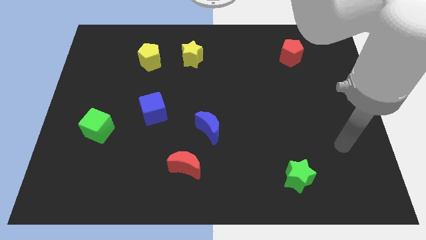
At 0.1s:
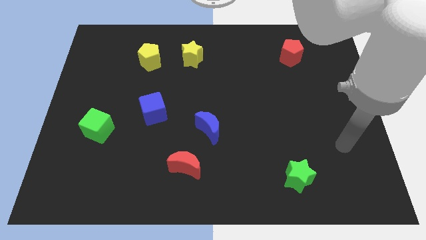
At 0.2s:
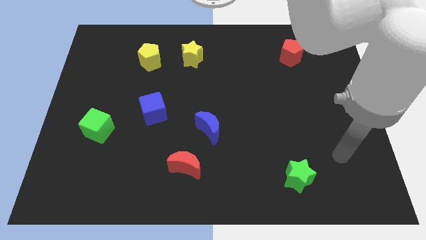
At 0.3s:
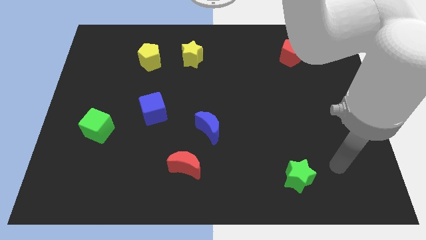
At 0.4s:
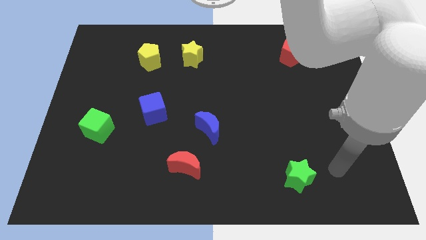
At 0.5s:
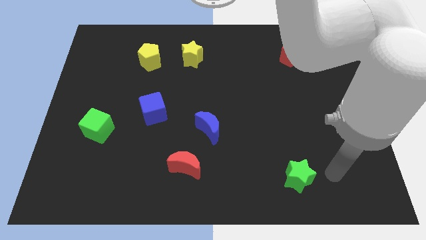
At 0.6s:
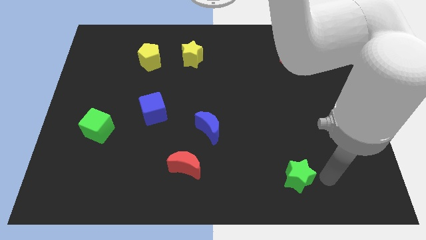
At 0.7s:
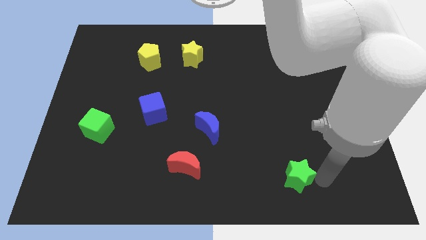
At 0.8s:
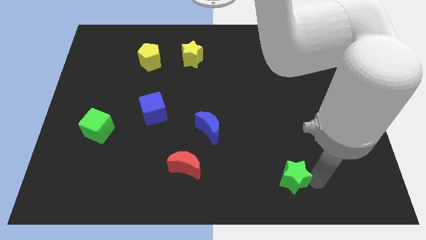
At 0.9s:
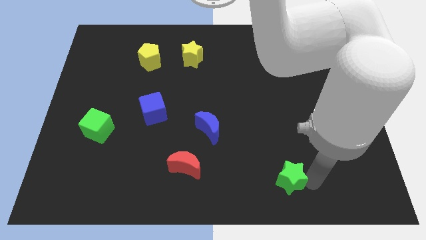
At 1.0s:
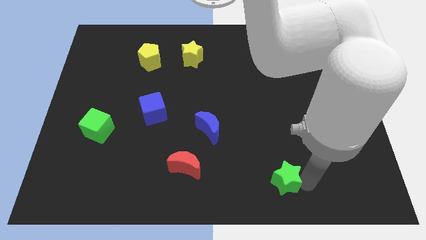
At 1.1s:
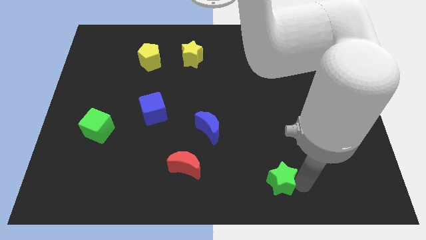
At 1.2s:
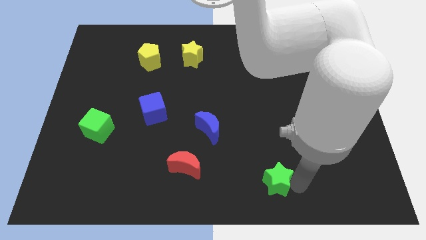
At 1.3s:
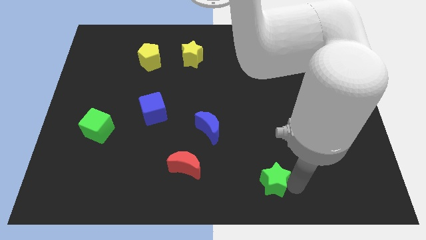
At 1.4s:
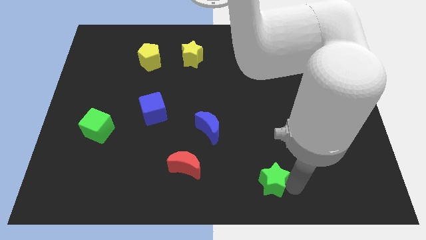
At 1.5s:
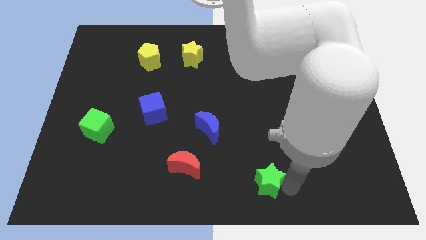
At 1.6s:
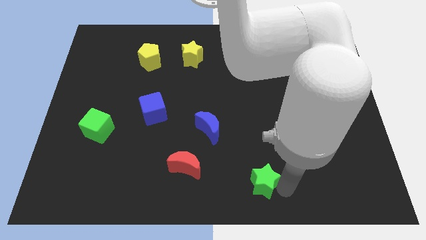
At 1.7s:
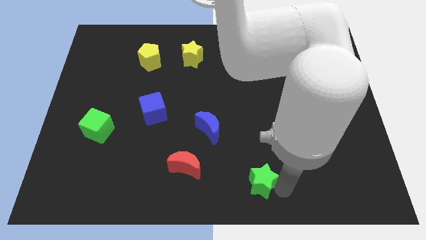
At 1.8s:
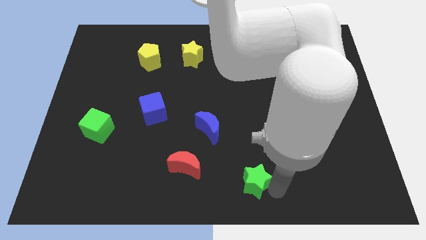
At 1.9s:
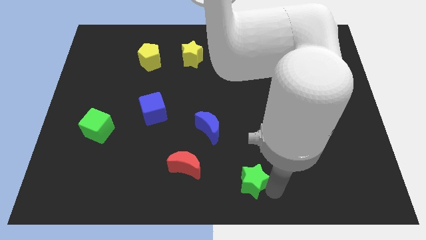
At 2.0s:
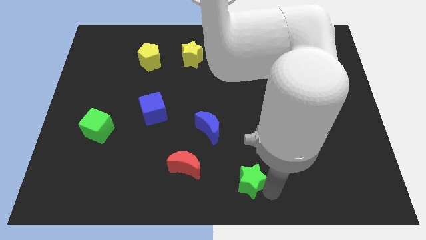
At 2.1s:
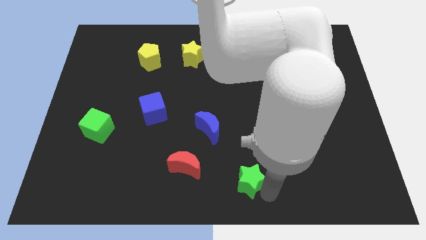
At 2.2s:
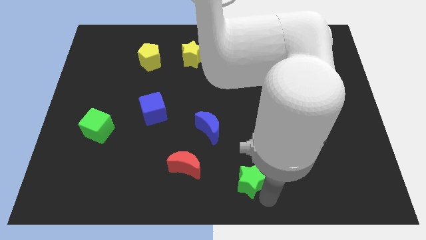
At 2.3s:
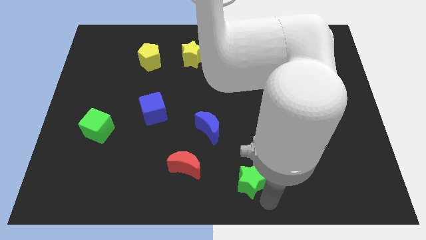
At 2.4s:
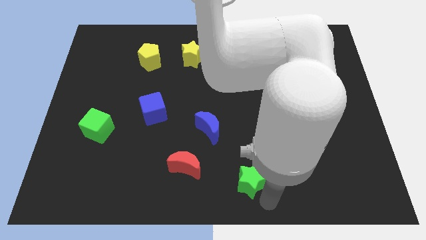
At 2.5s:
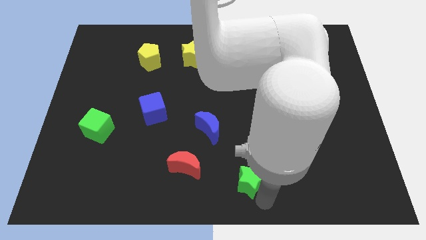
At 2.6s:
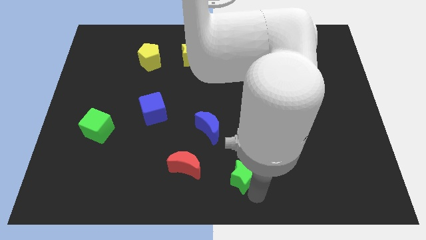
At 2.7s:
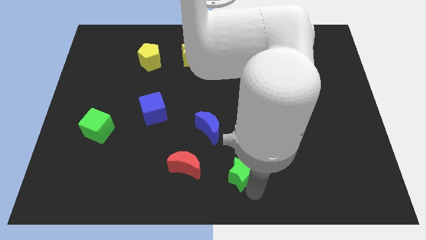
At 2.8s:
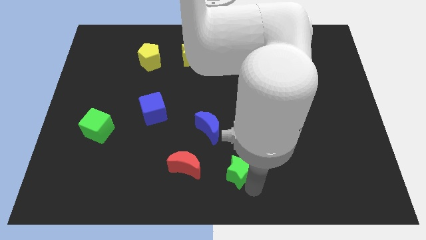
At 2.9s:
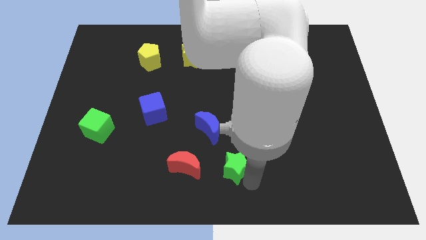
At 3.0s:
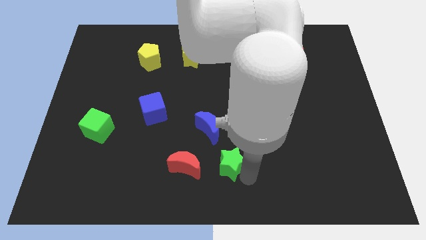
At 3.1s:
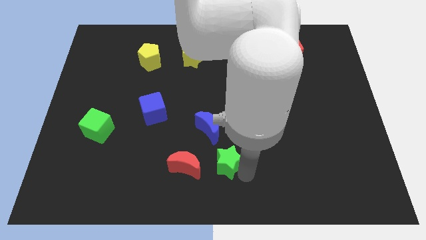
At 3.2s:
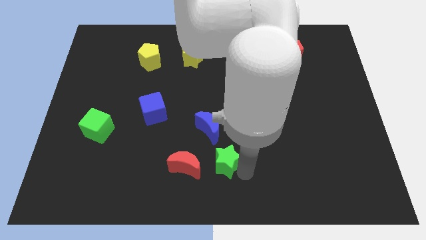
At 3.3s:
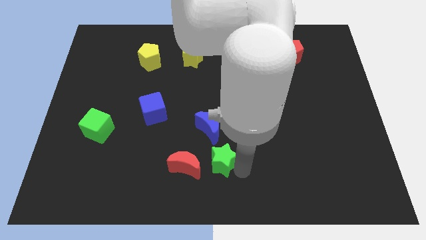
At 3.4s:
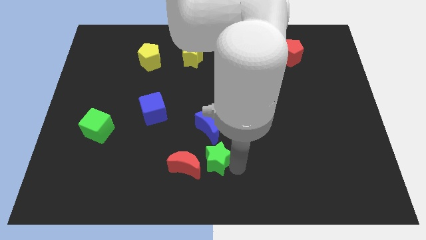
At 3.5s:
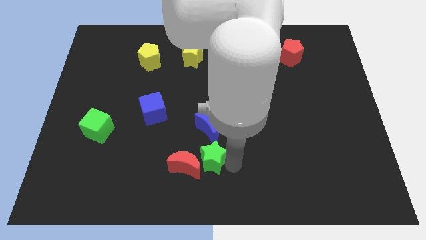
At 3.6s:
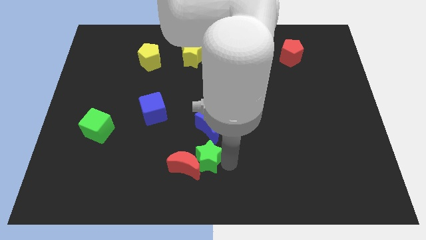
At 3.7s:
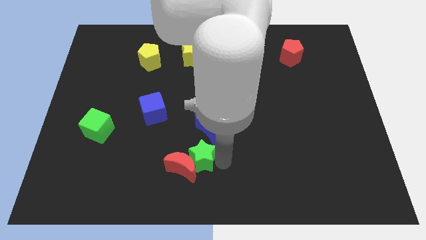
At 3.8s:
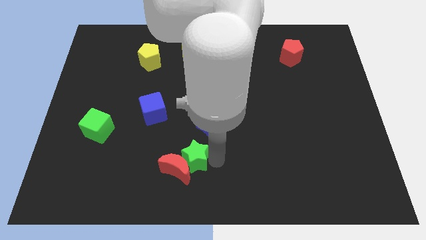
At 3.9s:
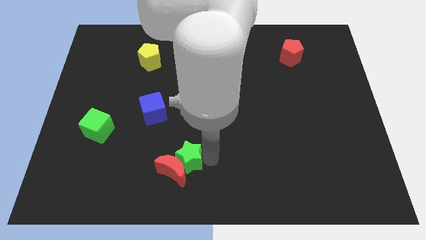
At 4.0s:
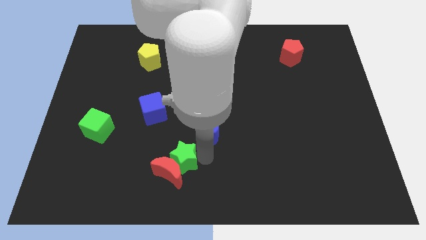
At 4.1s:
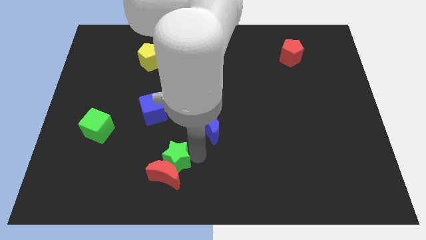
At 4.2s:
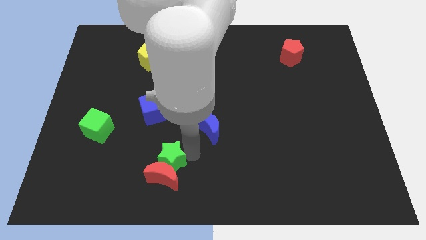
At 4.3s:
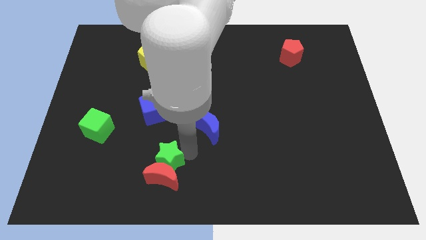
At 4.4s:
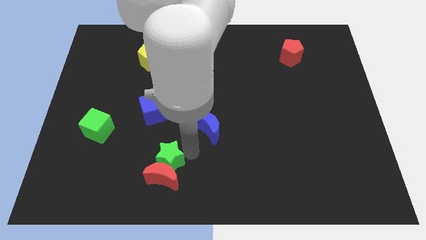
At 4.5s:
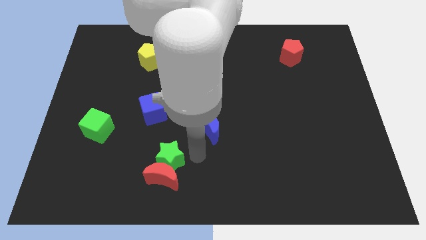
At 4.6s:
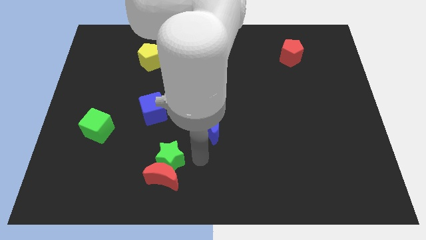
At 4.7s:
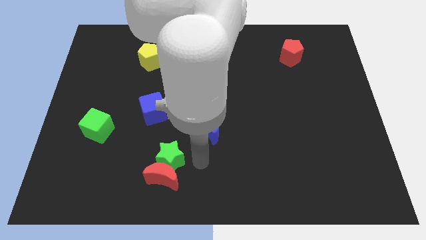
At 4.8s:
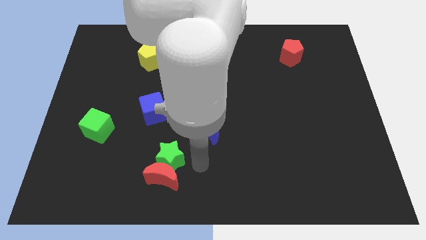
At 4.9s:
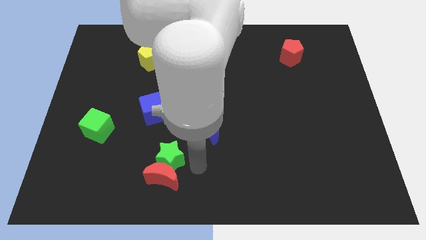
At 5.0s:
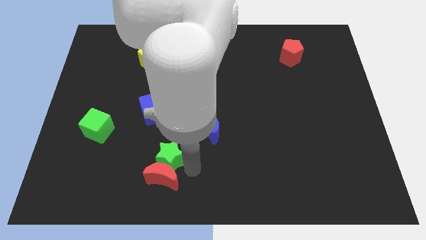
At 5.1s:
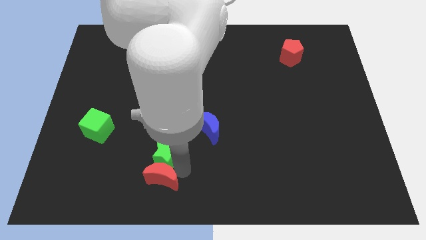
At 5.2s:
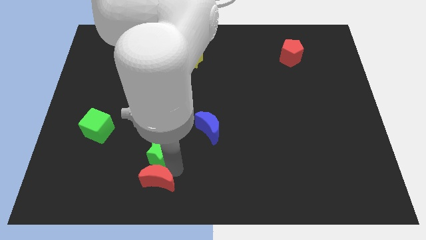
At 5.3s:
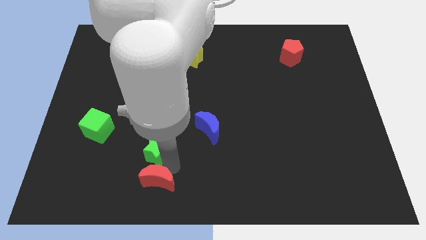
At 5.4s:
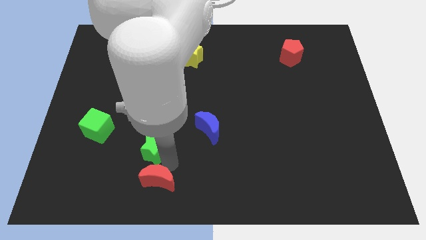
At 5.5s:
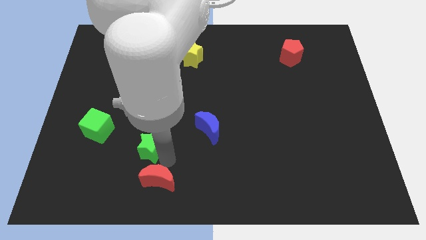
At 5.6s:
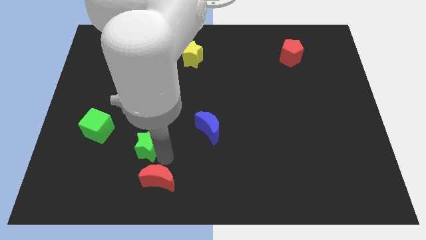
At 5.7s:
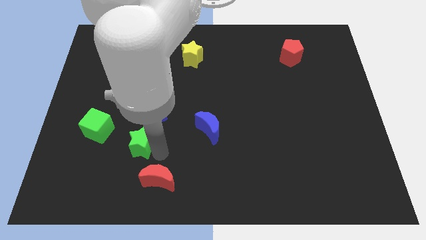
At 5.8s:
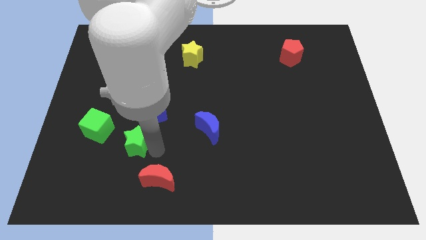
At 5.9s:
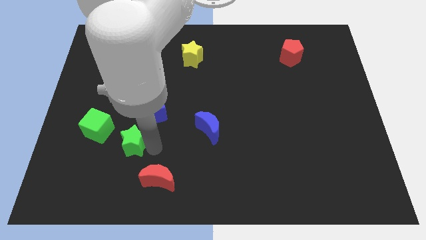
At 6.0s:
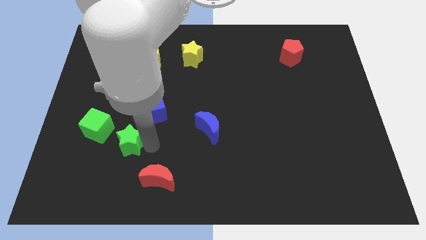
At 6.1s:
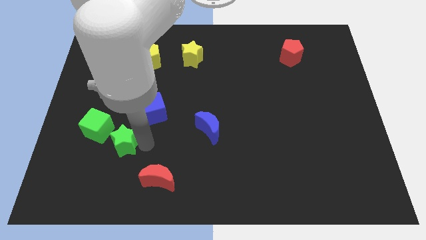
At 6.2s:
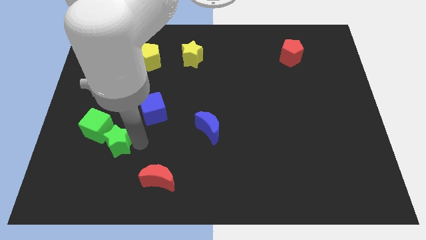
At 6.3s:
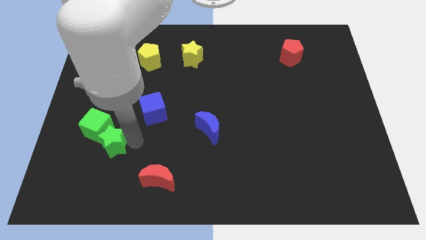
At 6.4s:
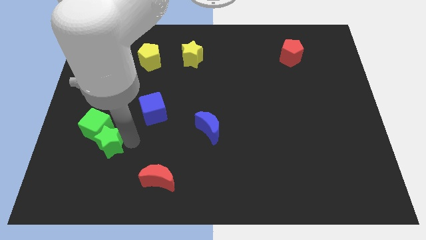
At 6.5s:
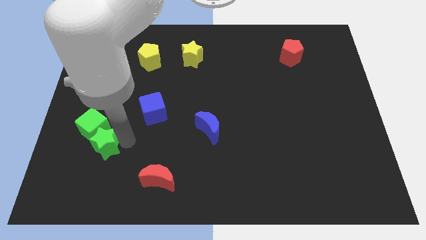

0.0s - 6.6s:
push the green star to the green cube

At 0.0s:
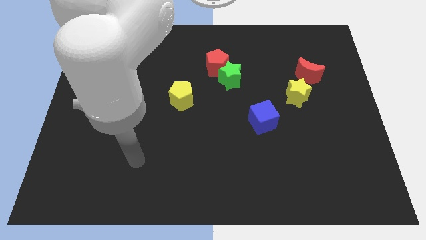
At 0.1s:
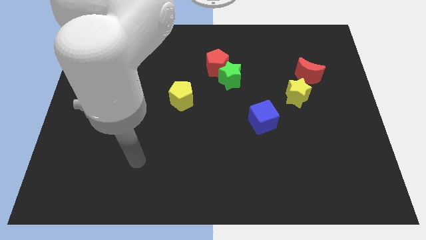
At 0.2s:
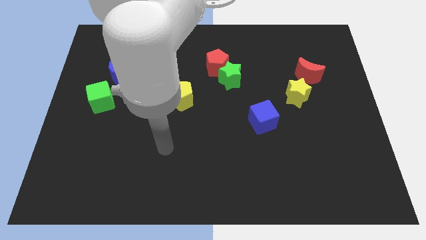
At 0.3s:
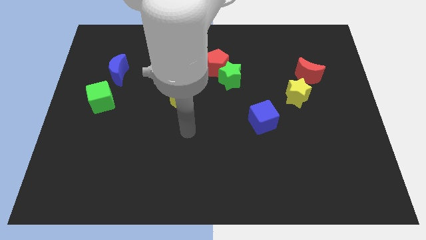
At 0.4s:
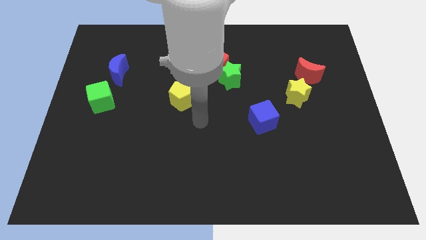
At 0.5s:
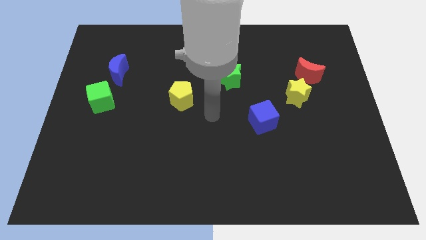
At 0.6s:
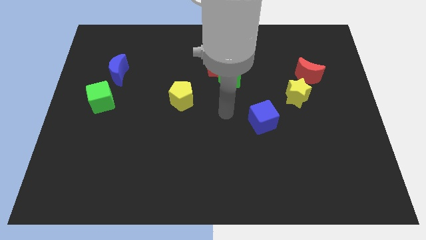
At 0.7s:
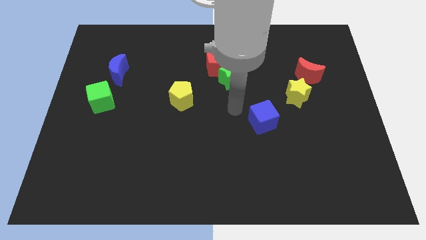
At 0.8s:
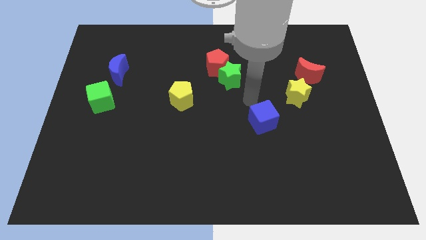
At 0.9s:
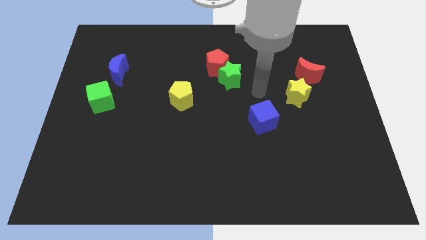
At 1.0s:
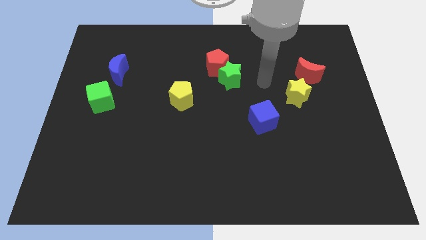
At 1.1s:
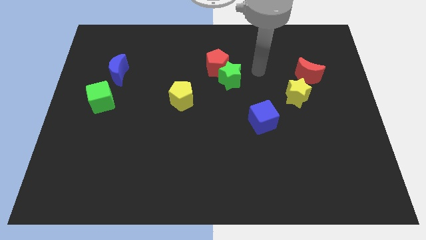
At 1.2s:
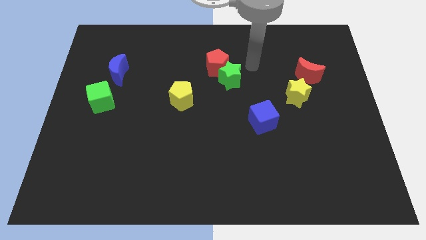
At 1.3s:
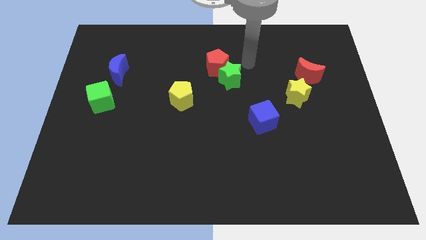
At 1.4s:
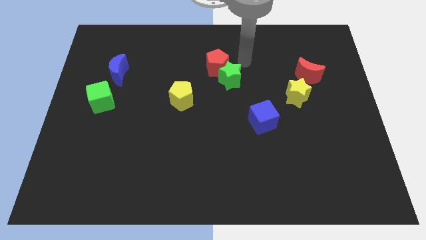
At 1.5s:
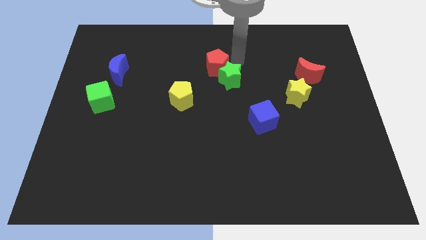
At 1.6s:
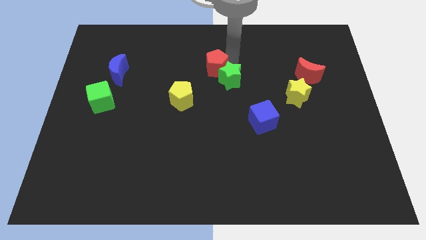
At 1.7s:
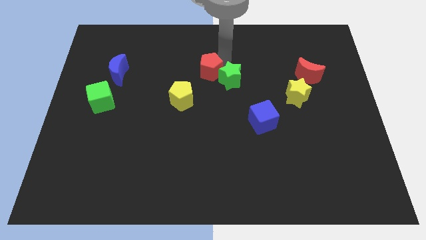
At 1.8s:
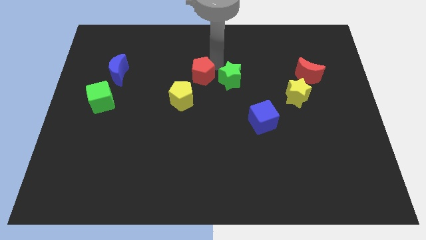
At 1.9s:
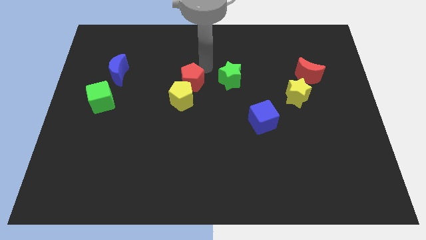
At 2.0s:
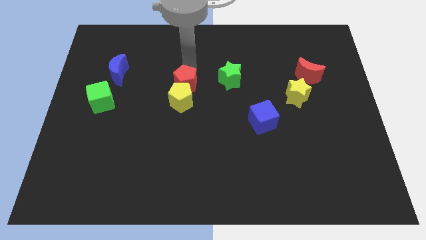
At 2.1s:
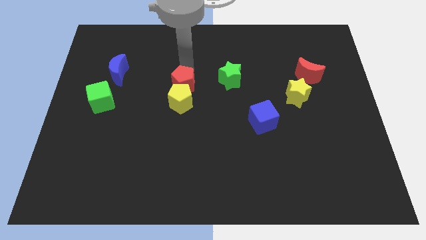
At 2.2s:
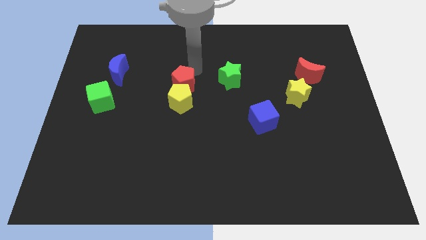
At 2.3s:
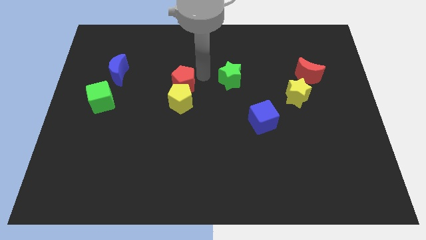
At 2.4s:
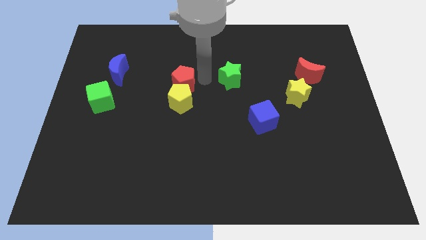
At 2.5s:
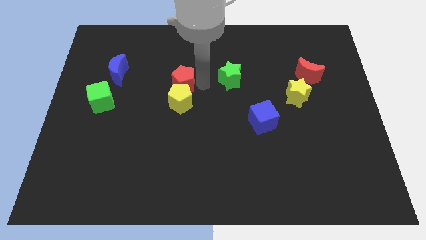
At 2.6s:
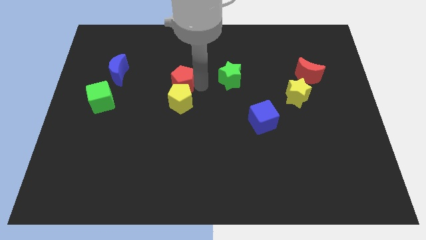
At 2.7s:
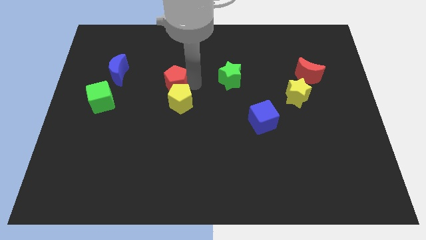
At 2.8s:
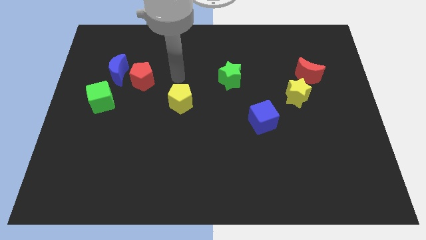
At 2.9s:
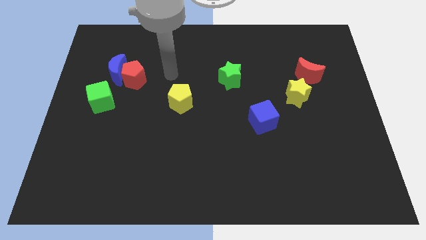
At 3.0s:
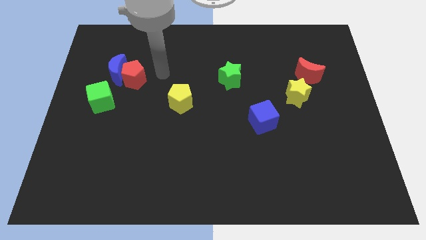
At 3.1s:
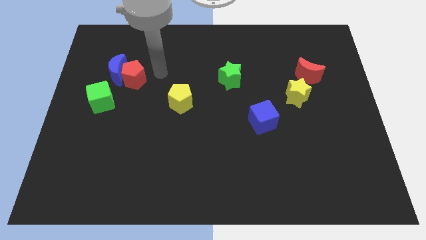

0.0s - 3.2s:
put the red pentagon next to the blue moon
